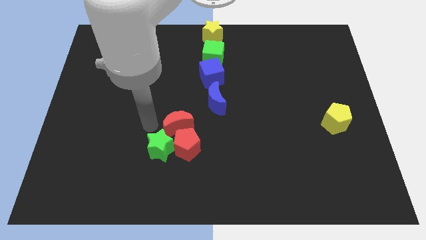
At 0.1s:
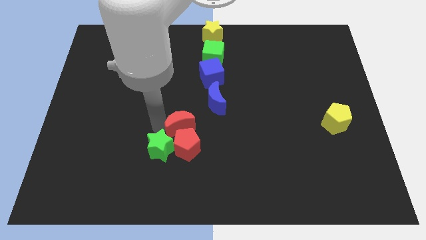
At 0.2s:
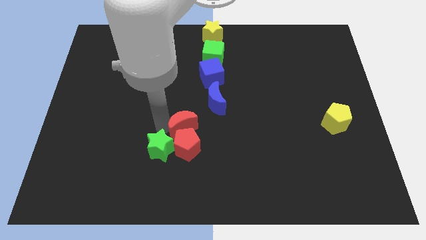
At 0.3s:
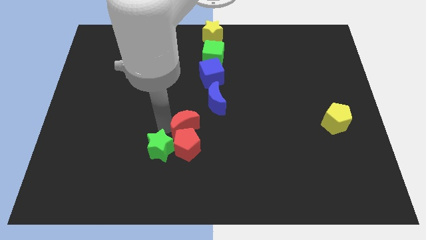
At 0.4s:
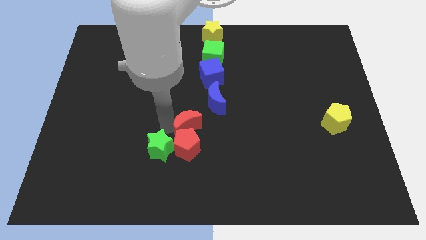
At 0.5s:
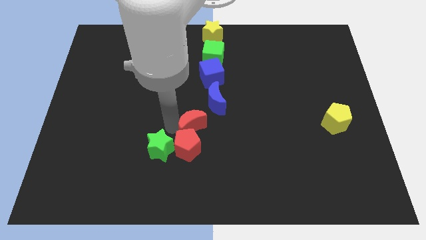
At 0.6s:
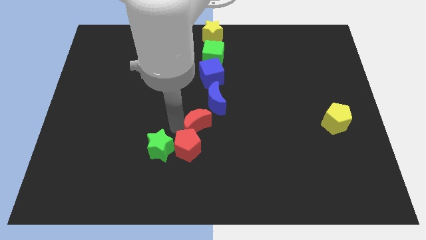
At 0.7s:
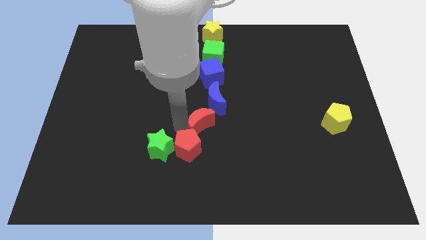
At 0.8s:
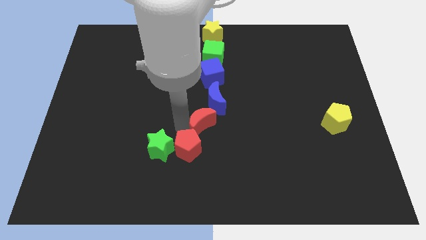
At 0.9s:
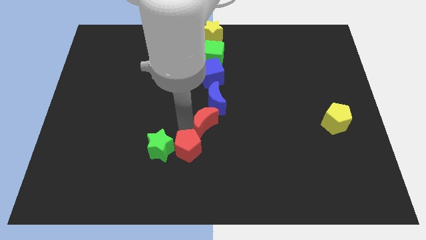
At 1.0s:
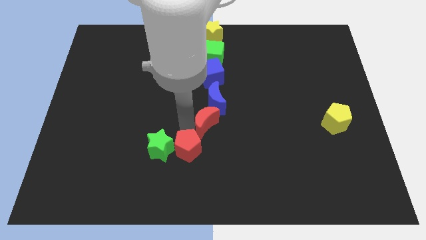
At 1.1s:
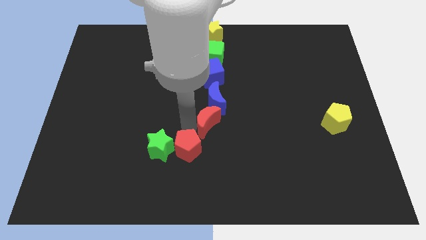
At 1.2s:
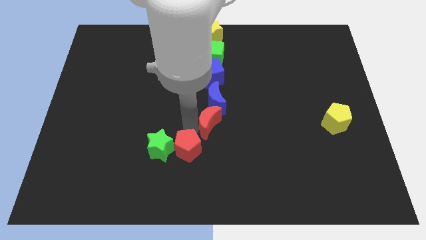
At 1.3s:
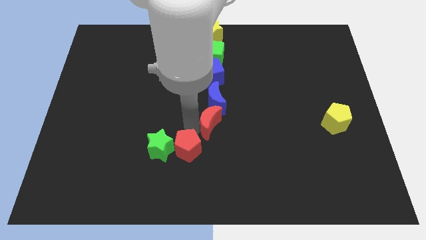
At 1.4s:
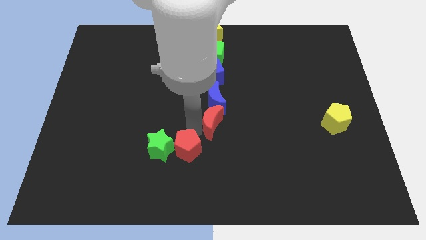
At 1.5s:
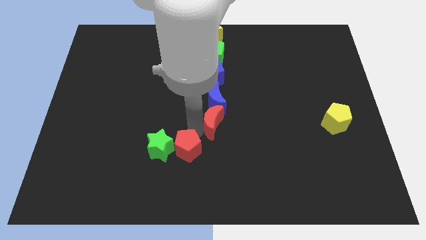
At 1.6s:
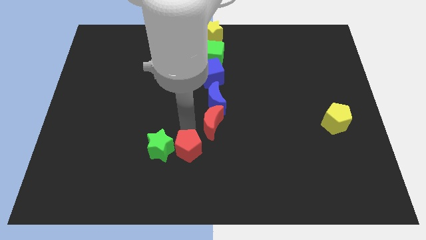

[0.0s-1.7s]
move the red moon under the blue moon

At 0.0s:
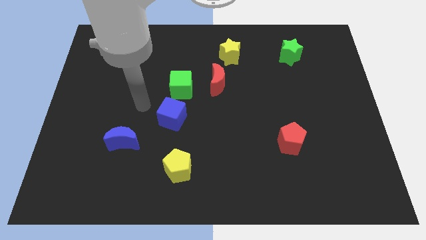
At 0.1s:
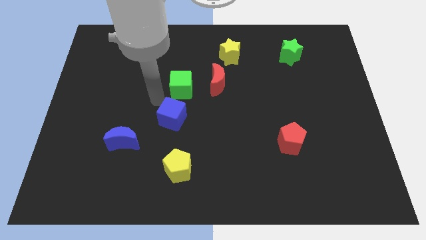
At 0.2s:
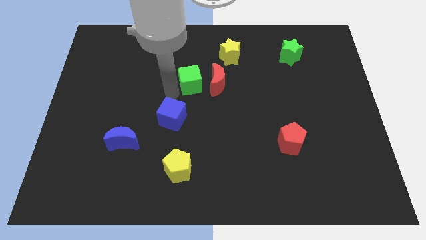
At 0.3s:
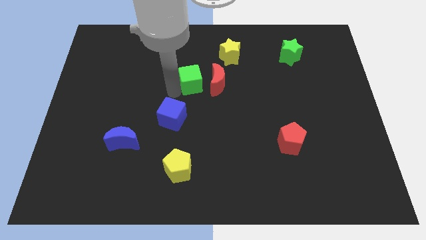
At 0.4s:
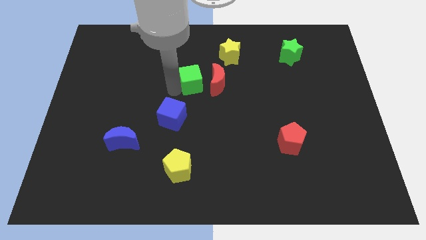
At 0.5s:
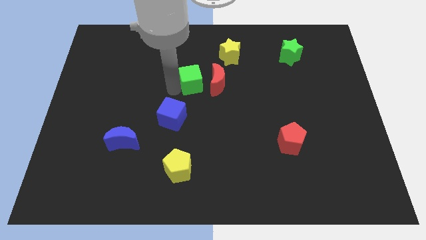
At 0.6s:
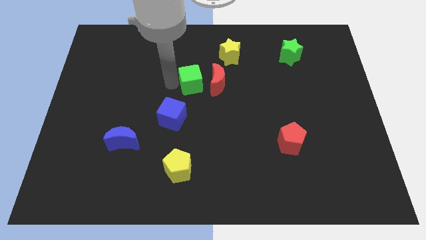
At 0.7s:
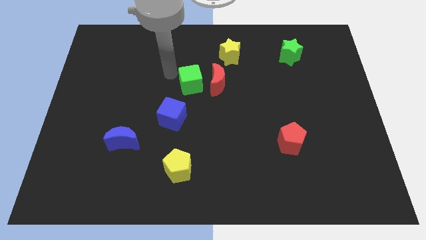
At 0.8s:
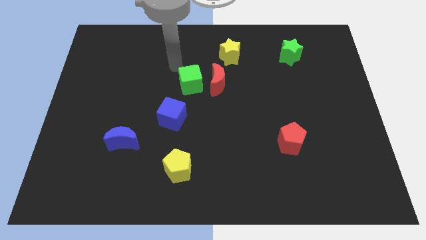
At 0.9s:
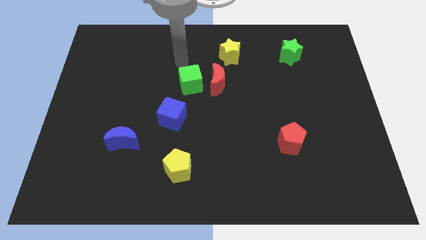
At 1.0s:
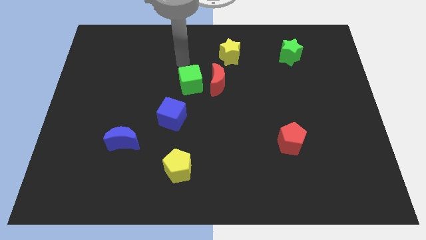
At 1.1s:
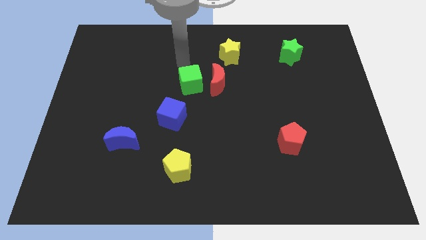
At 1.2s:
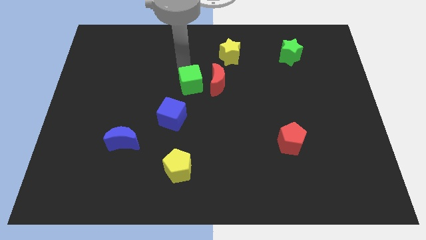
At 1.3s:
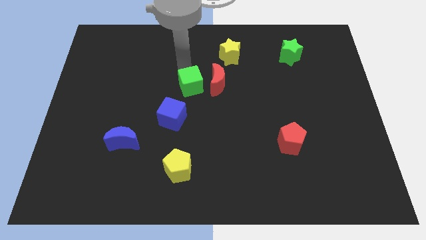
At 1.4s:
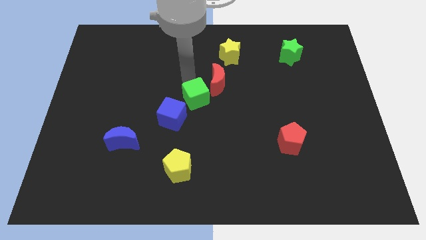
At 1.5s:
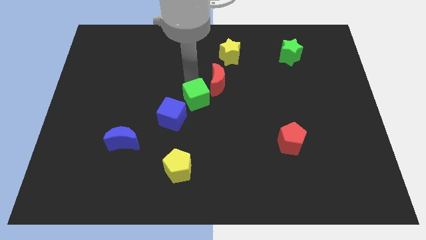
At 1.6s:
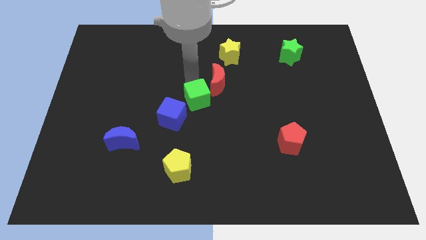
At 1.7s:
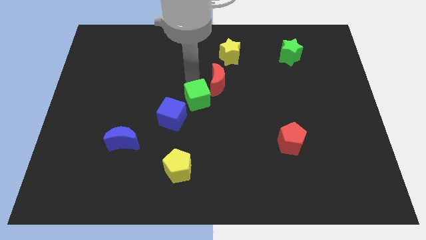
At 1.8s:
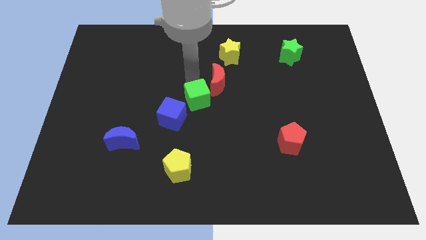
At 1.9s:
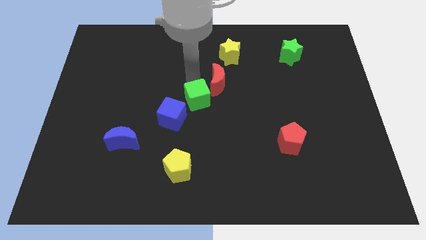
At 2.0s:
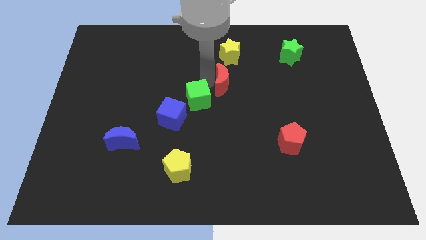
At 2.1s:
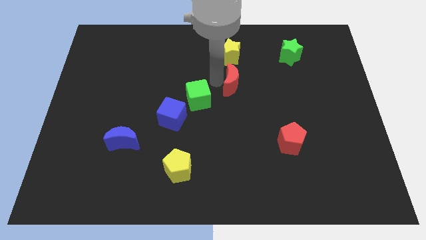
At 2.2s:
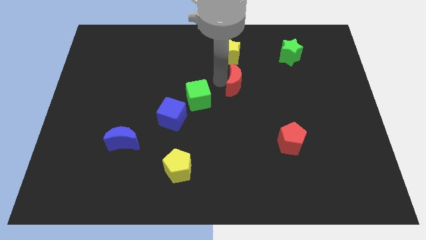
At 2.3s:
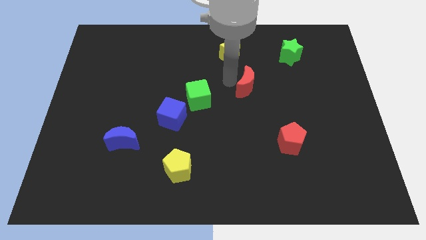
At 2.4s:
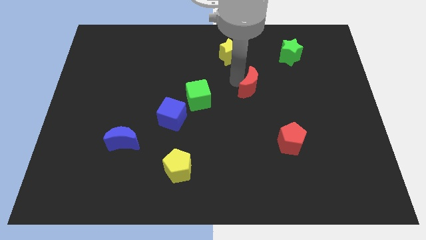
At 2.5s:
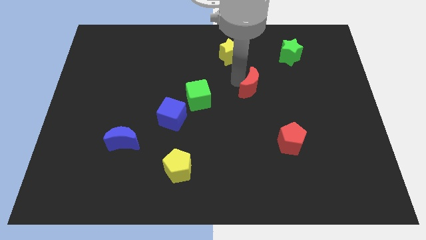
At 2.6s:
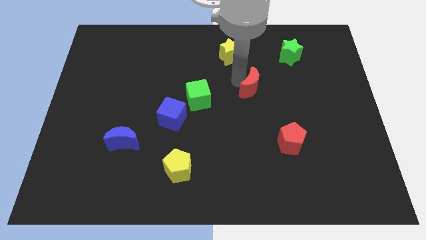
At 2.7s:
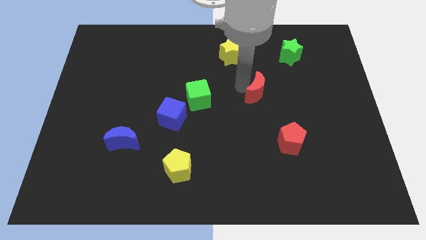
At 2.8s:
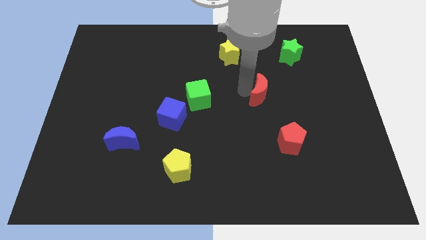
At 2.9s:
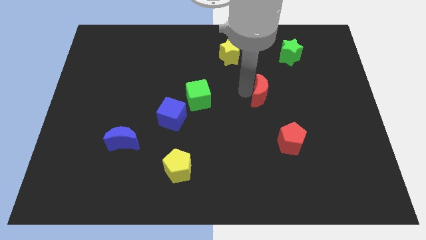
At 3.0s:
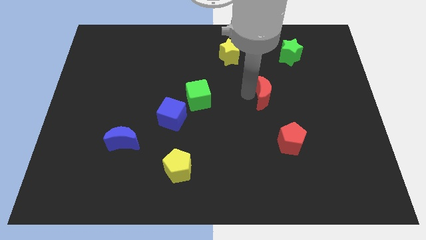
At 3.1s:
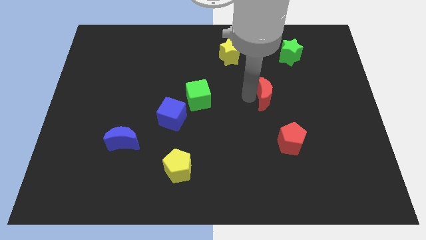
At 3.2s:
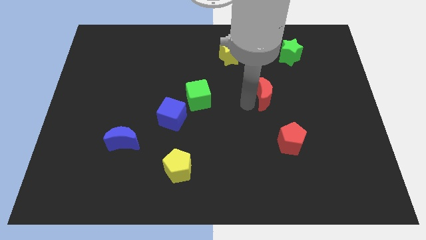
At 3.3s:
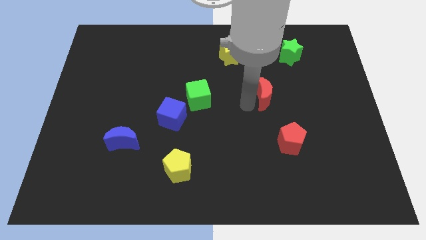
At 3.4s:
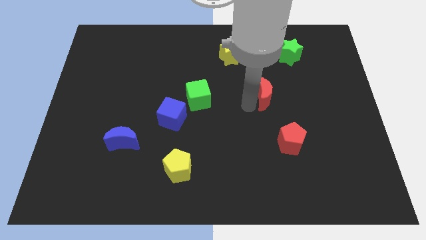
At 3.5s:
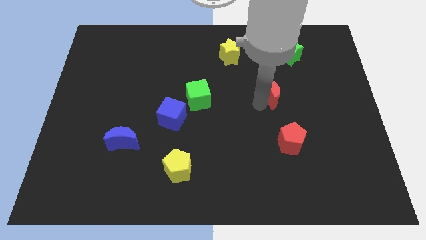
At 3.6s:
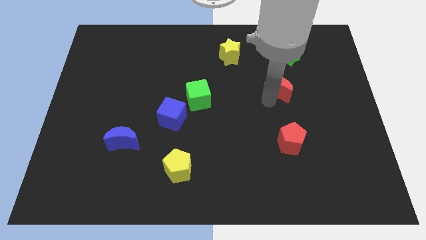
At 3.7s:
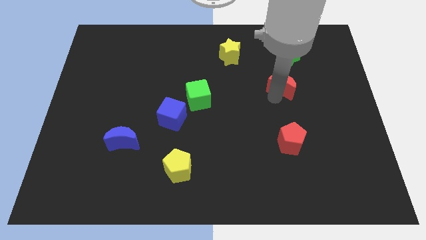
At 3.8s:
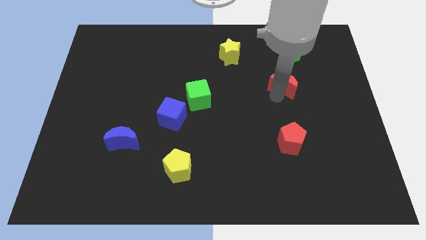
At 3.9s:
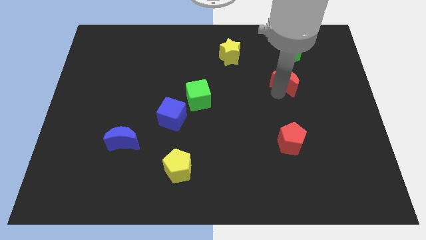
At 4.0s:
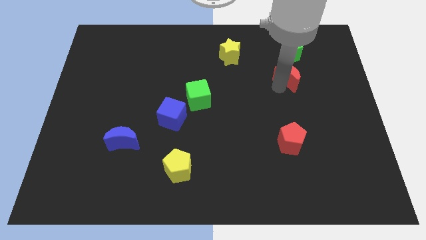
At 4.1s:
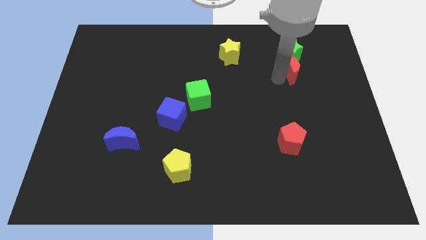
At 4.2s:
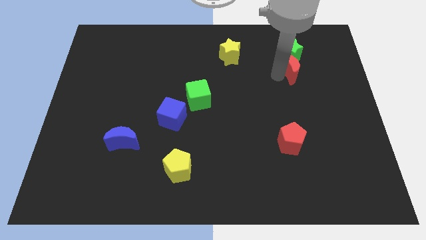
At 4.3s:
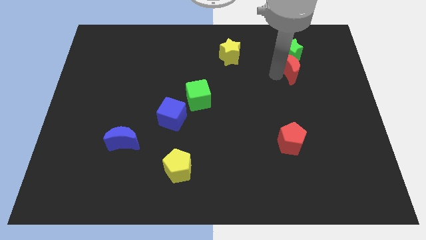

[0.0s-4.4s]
place the red moon below the green star

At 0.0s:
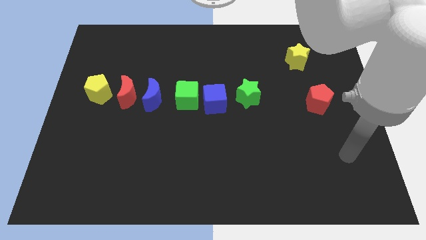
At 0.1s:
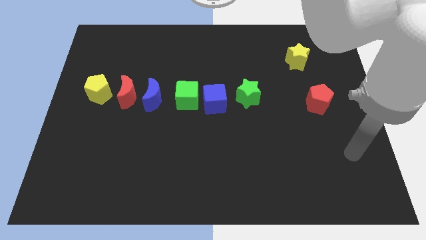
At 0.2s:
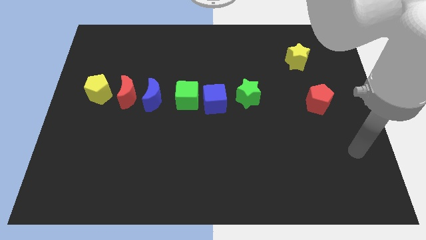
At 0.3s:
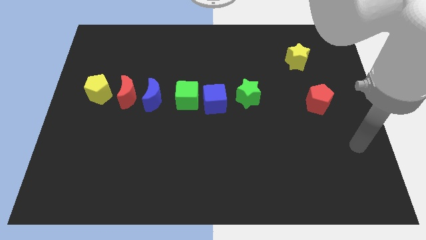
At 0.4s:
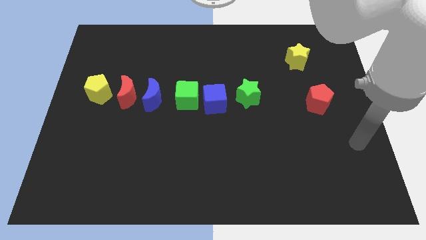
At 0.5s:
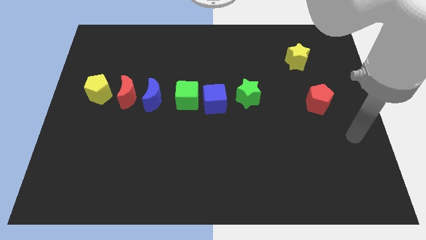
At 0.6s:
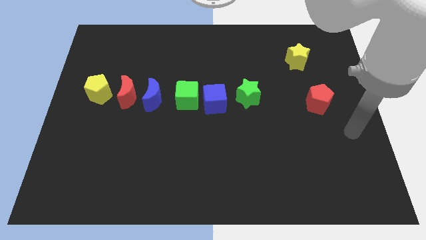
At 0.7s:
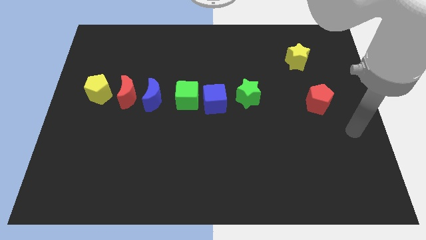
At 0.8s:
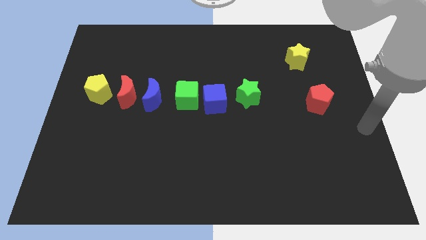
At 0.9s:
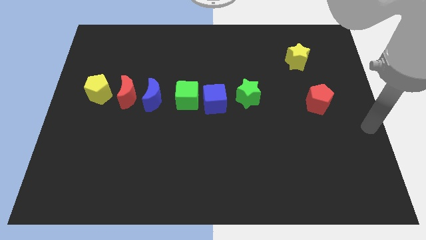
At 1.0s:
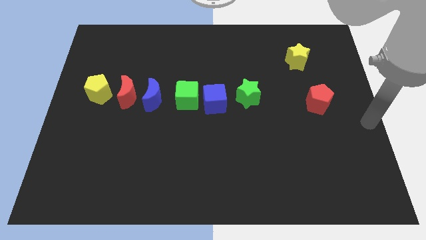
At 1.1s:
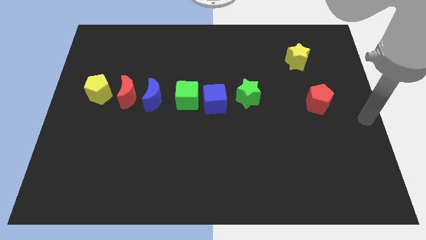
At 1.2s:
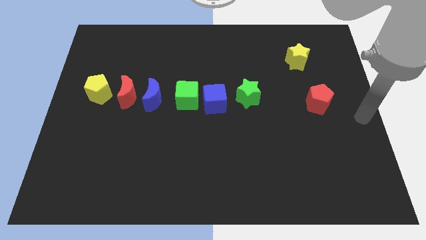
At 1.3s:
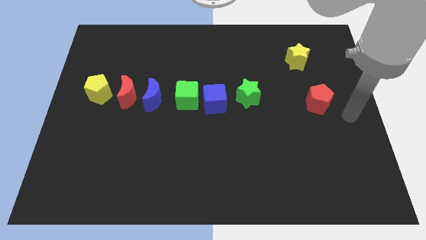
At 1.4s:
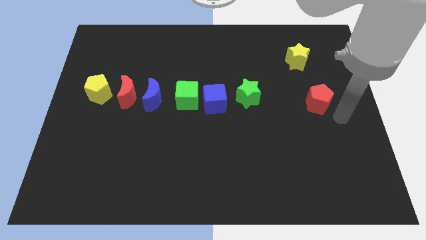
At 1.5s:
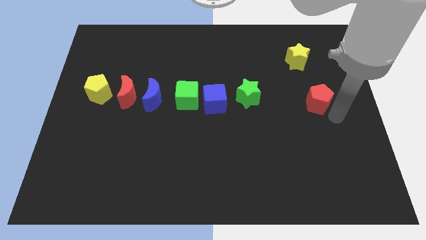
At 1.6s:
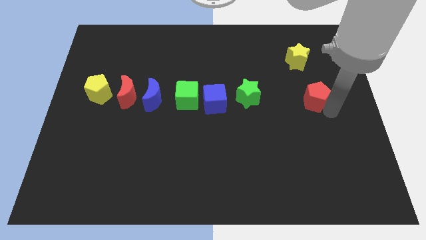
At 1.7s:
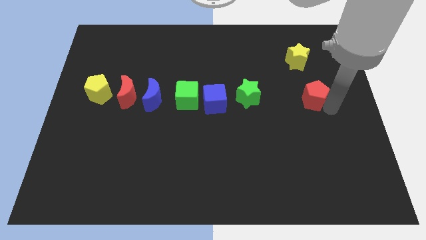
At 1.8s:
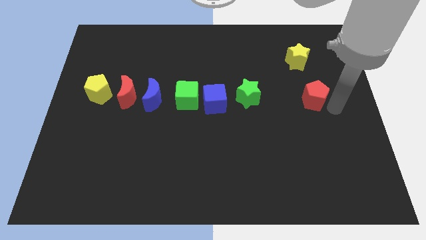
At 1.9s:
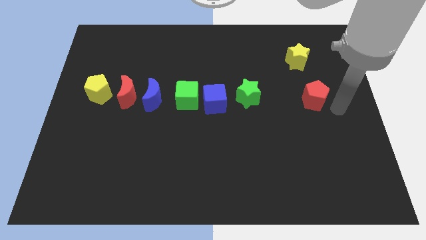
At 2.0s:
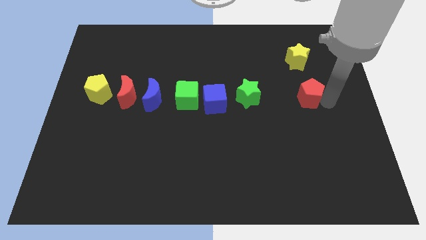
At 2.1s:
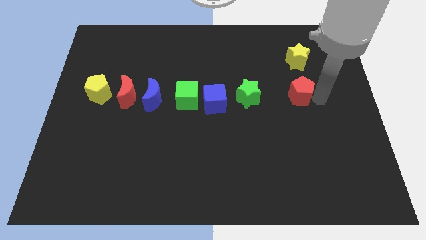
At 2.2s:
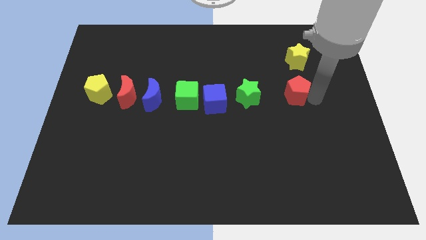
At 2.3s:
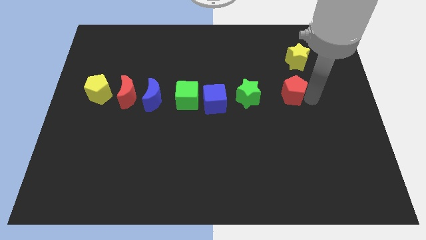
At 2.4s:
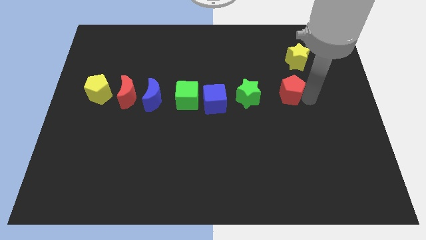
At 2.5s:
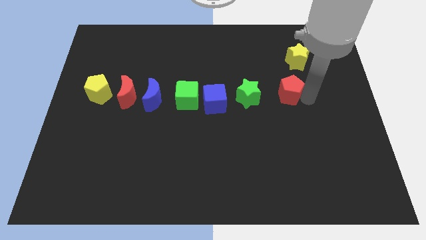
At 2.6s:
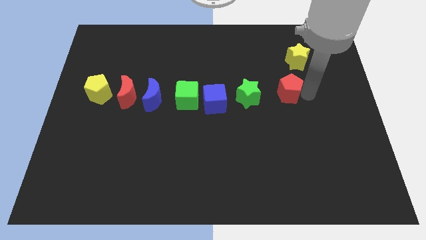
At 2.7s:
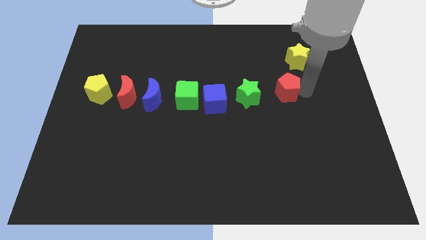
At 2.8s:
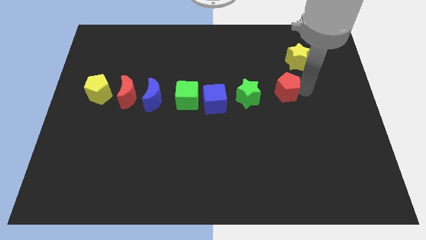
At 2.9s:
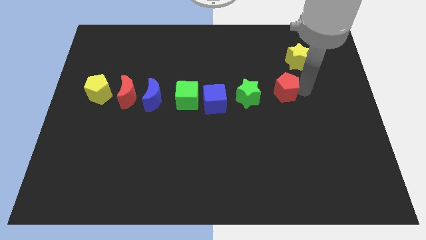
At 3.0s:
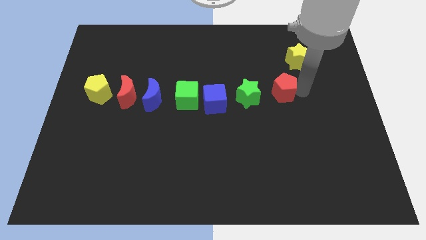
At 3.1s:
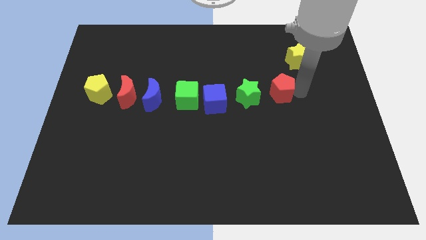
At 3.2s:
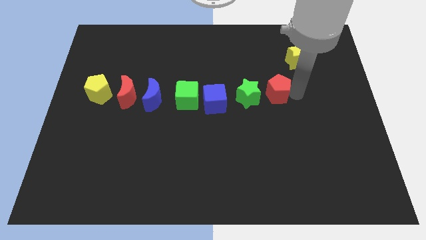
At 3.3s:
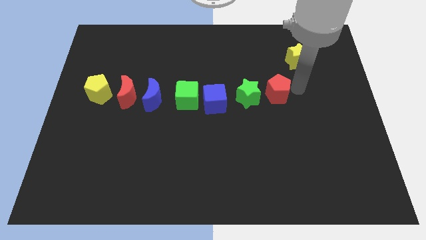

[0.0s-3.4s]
move there pentagon to the right of green star
